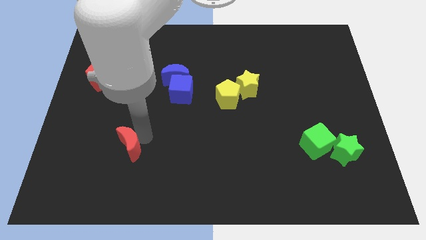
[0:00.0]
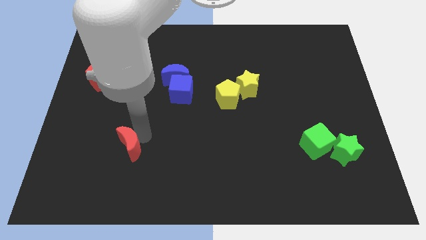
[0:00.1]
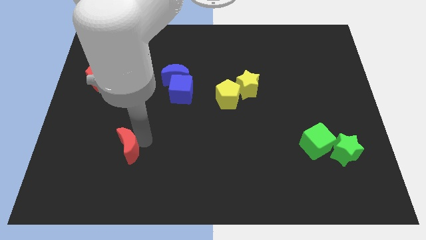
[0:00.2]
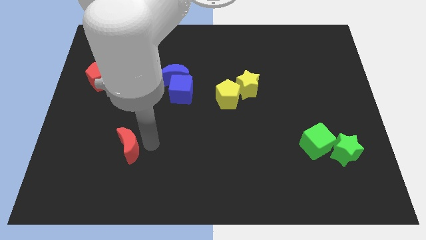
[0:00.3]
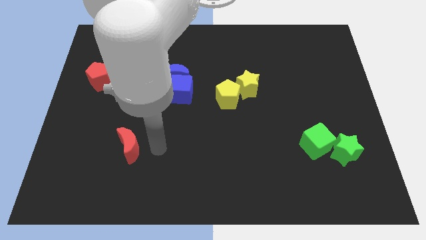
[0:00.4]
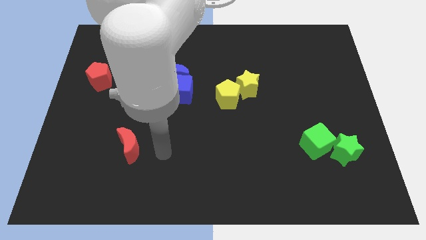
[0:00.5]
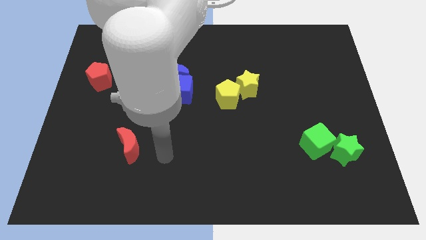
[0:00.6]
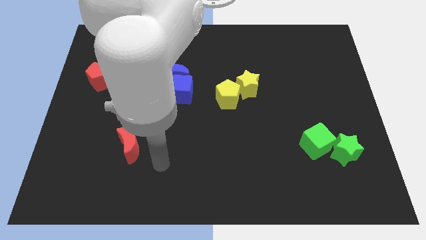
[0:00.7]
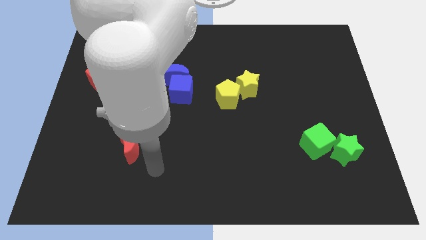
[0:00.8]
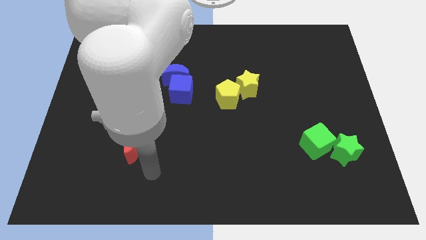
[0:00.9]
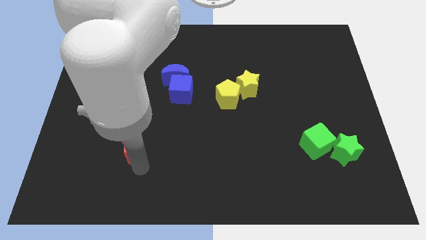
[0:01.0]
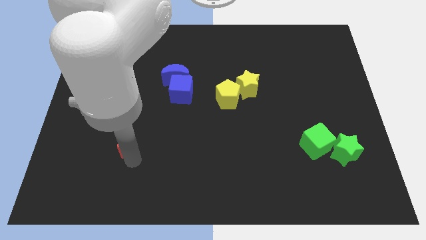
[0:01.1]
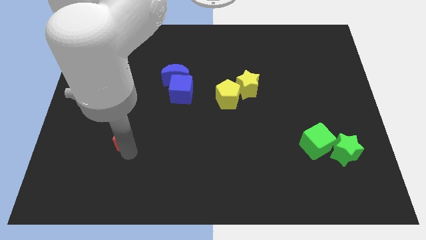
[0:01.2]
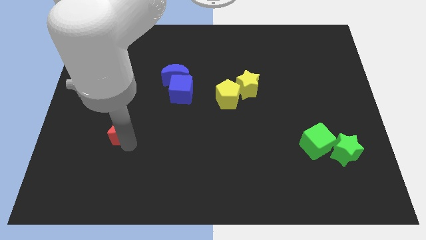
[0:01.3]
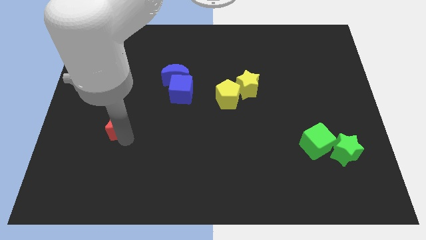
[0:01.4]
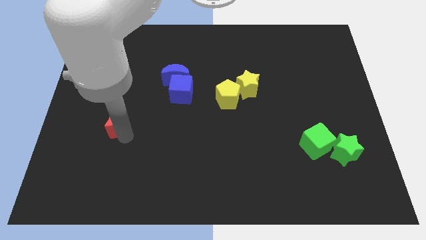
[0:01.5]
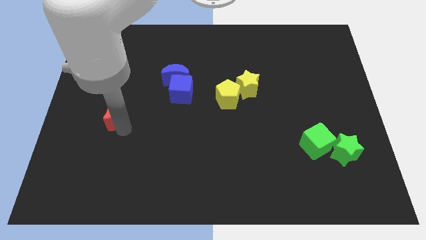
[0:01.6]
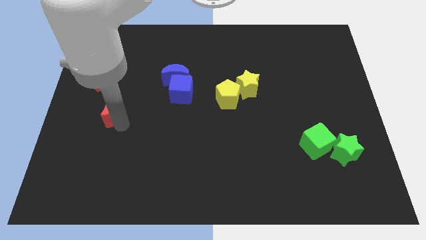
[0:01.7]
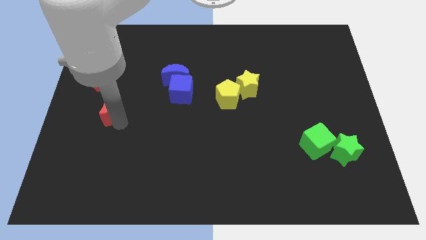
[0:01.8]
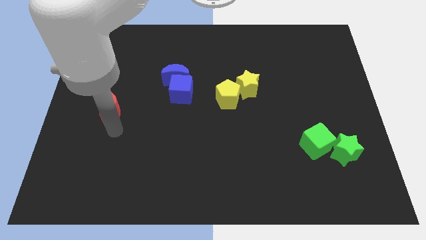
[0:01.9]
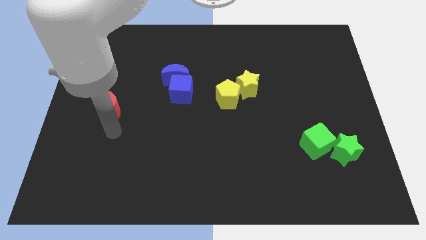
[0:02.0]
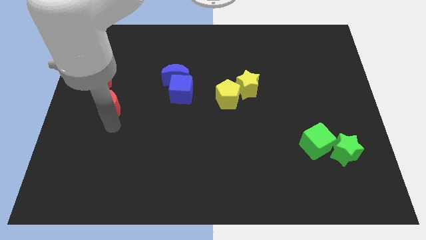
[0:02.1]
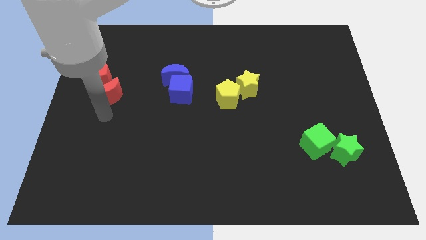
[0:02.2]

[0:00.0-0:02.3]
push the red crescent into the red pentagon from the bottom

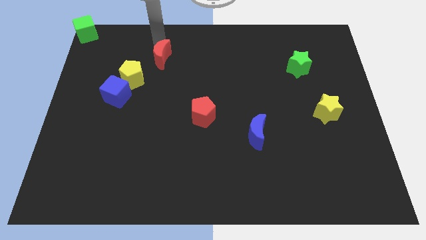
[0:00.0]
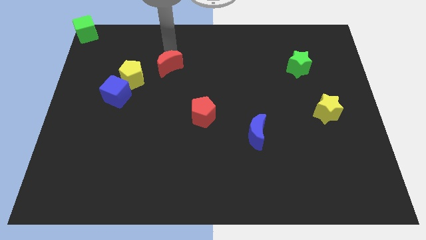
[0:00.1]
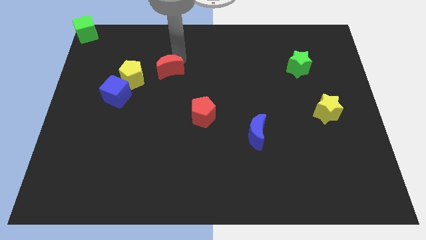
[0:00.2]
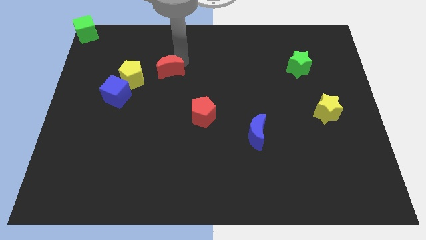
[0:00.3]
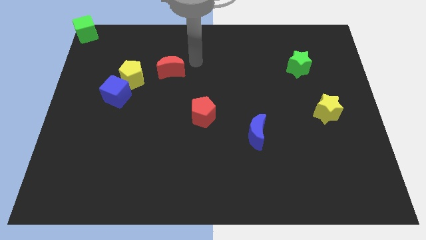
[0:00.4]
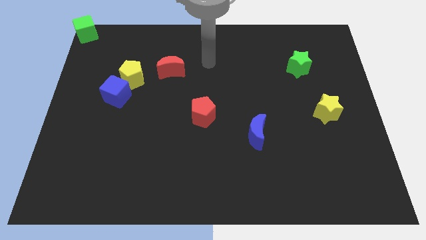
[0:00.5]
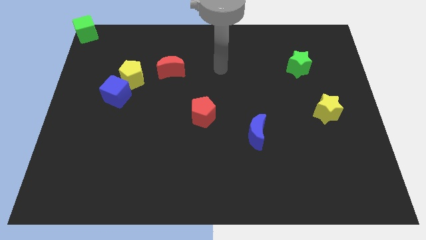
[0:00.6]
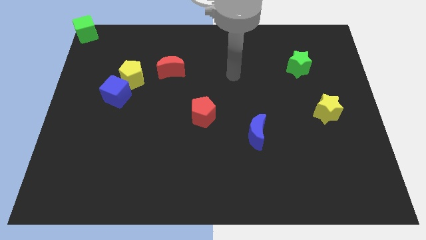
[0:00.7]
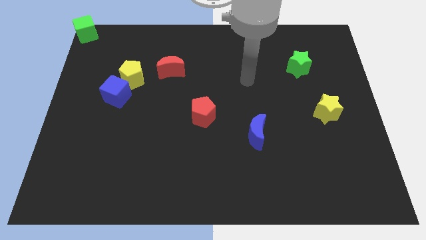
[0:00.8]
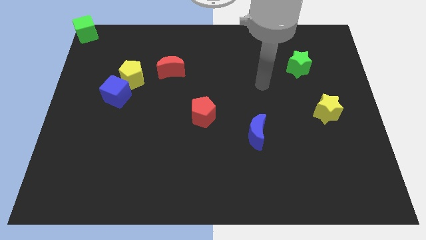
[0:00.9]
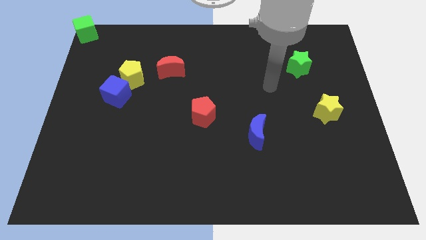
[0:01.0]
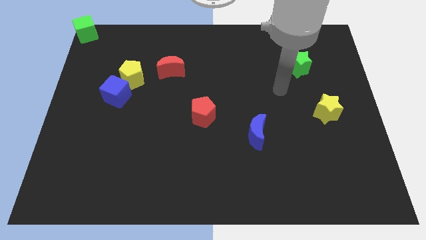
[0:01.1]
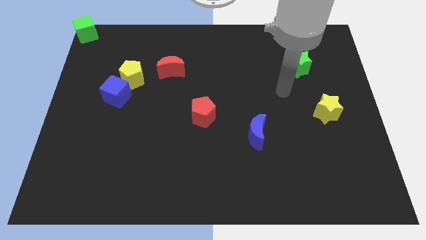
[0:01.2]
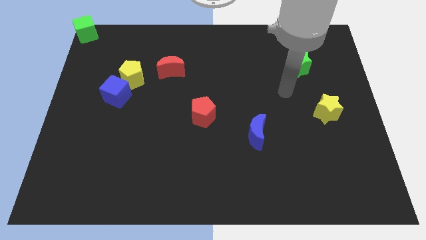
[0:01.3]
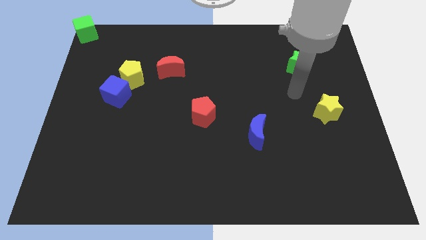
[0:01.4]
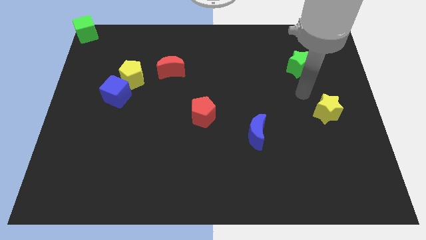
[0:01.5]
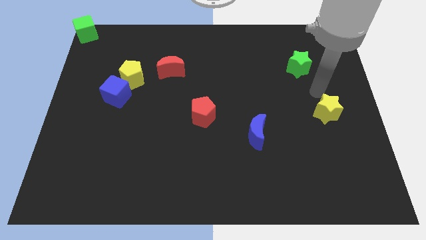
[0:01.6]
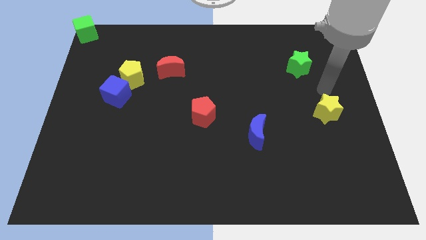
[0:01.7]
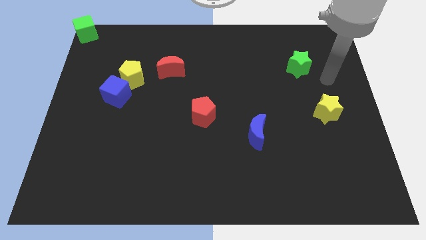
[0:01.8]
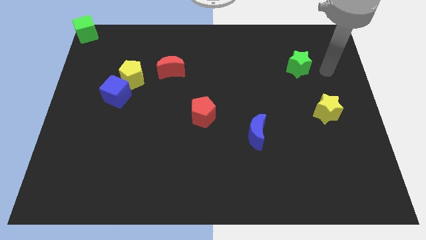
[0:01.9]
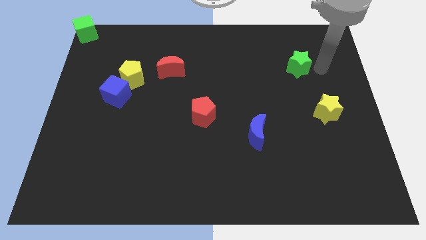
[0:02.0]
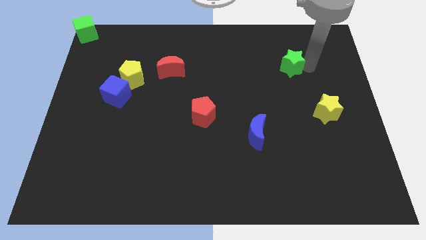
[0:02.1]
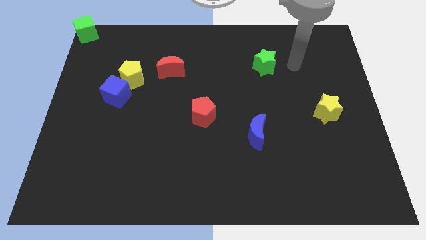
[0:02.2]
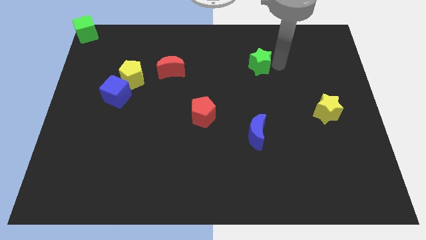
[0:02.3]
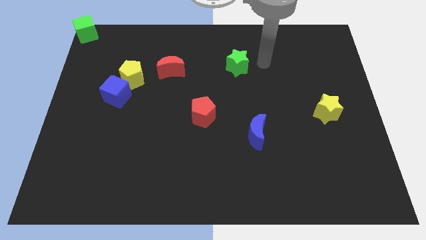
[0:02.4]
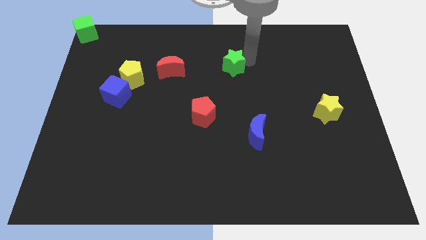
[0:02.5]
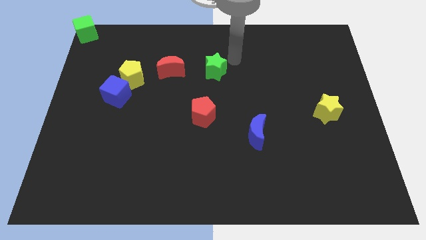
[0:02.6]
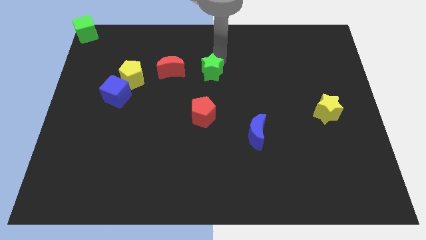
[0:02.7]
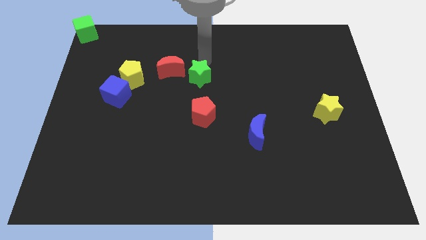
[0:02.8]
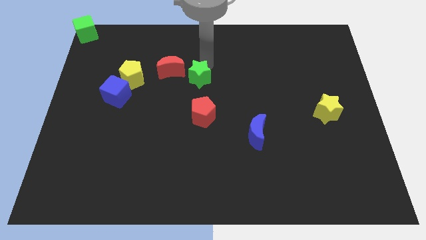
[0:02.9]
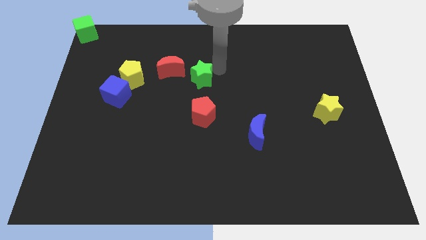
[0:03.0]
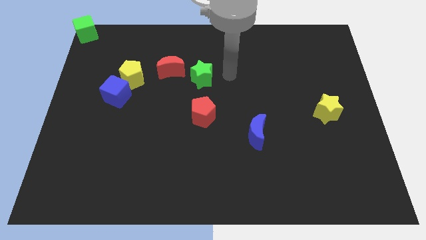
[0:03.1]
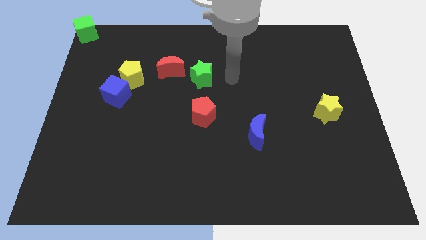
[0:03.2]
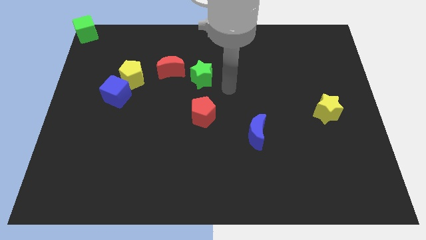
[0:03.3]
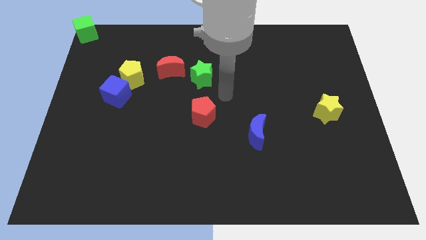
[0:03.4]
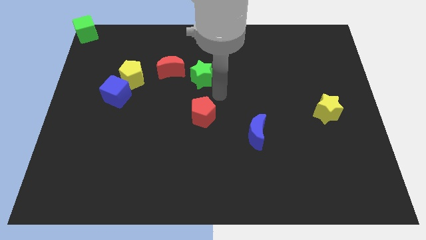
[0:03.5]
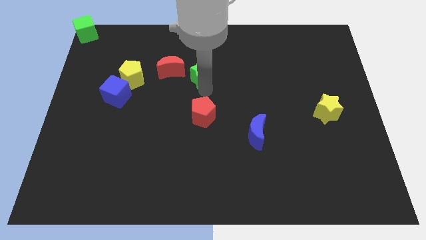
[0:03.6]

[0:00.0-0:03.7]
point your arm in between the red pentagon and green star

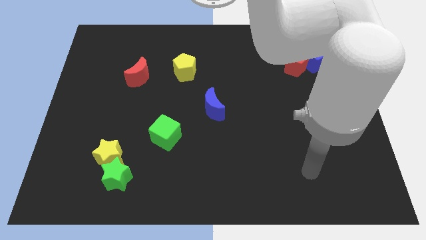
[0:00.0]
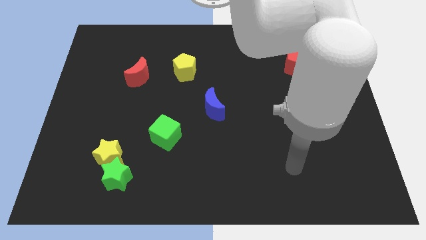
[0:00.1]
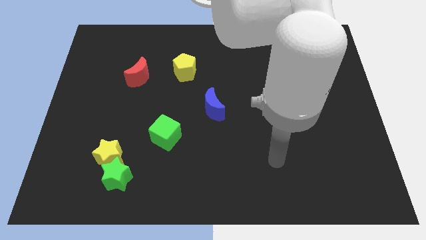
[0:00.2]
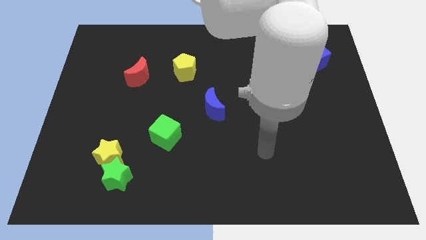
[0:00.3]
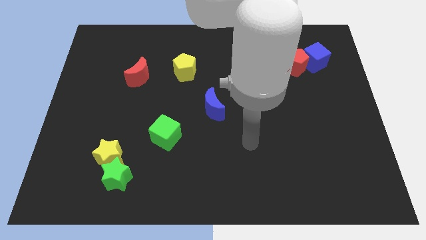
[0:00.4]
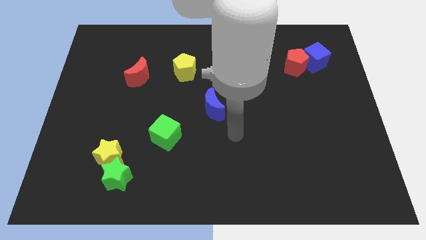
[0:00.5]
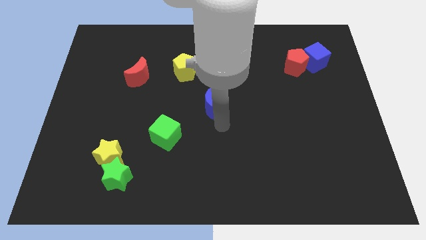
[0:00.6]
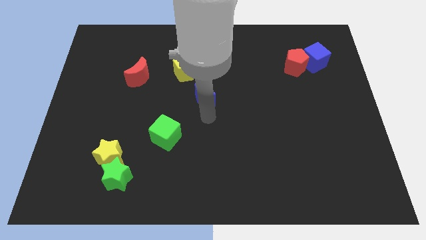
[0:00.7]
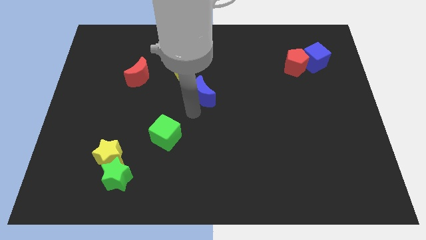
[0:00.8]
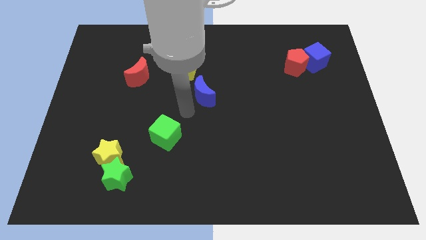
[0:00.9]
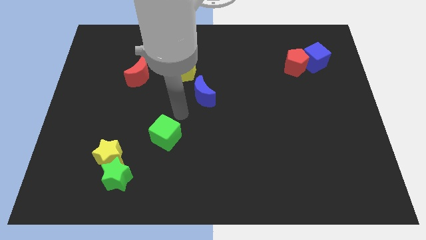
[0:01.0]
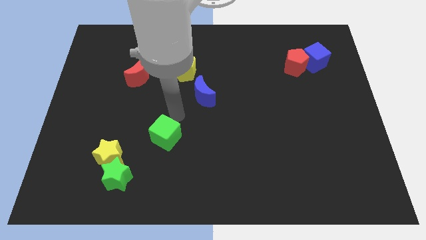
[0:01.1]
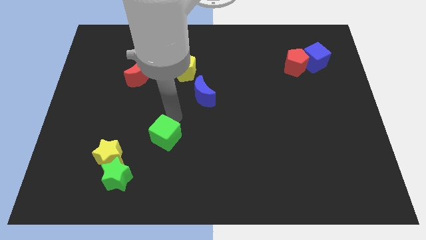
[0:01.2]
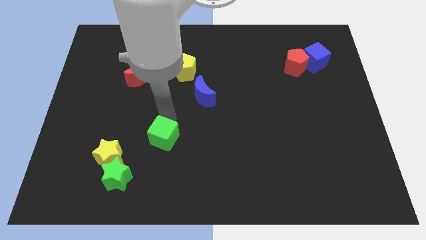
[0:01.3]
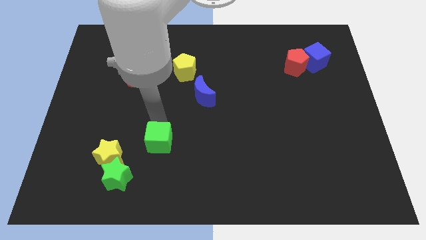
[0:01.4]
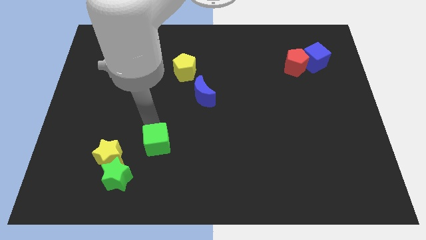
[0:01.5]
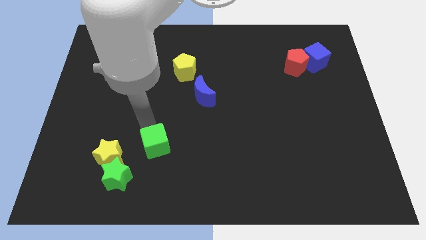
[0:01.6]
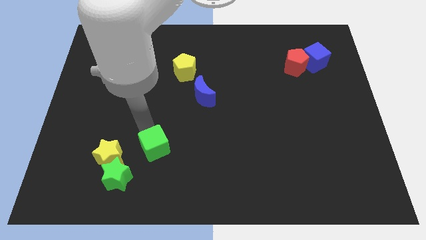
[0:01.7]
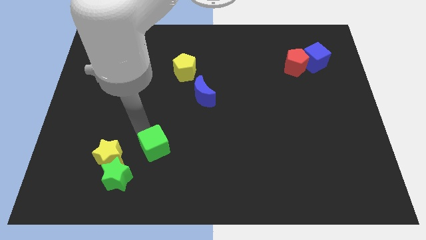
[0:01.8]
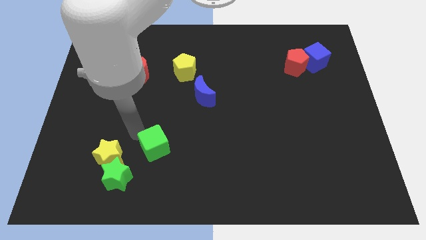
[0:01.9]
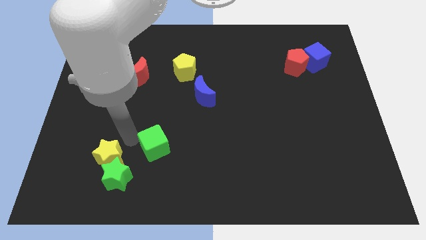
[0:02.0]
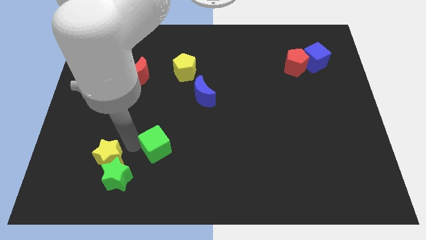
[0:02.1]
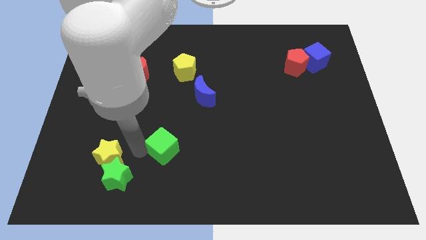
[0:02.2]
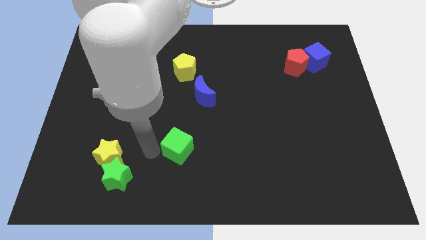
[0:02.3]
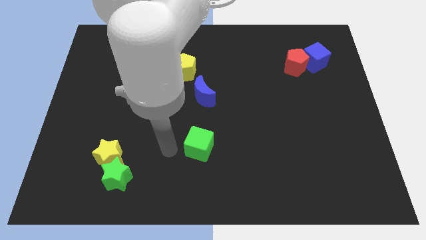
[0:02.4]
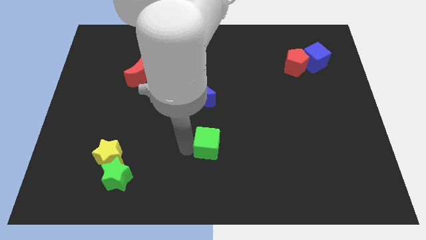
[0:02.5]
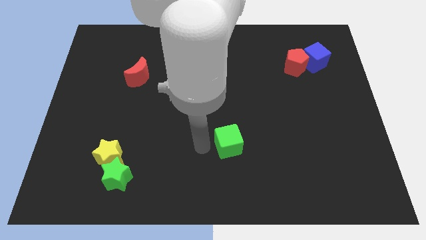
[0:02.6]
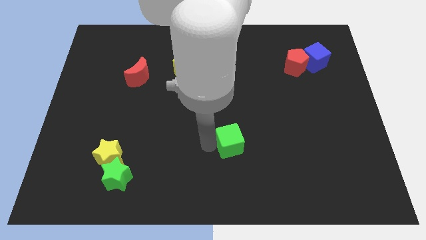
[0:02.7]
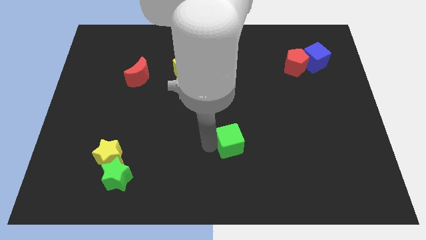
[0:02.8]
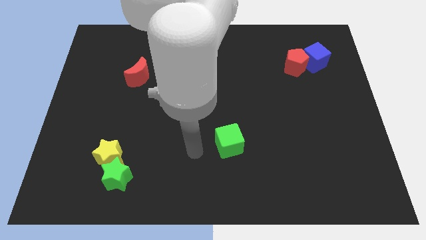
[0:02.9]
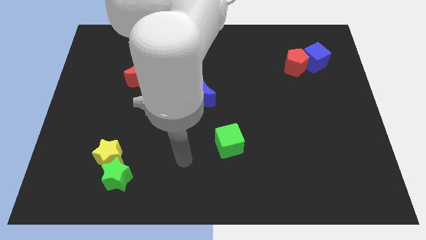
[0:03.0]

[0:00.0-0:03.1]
move the green cube diagonal to blue cube
